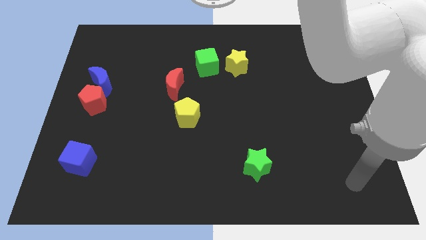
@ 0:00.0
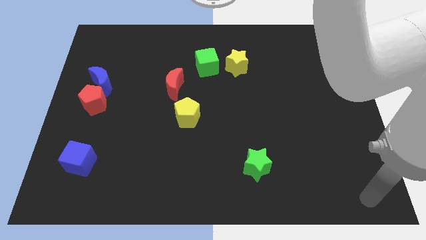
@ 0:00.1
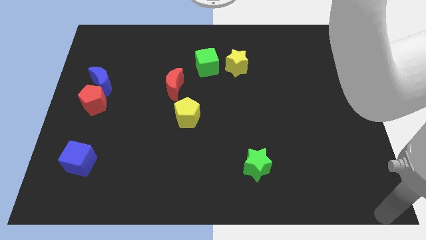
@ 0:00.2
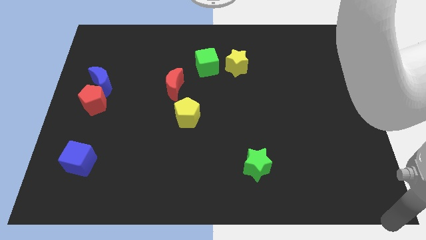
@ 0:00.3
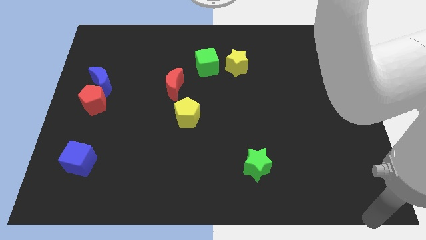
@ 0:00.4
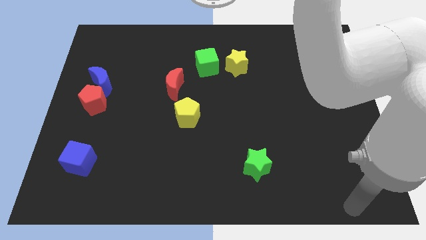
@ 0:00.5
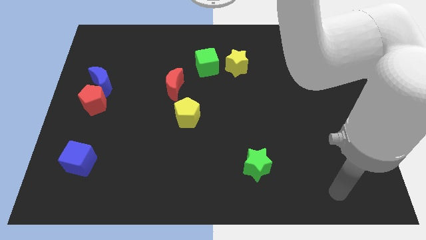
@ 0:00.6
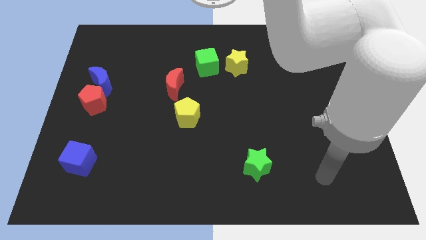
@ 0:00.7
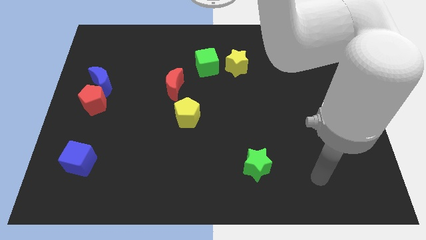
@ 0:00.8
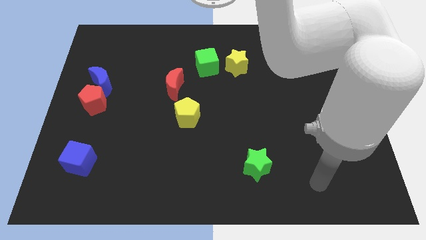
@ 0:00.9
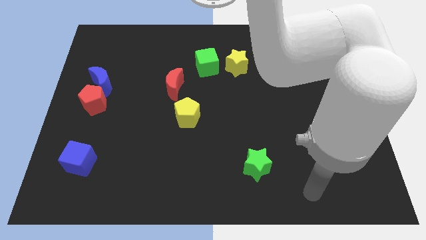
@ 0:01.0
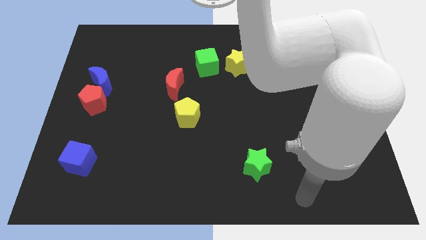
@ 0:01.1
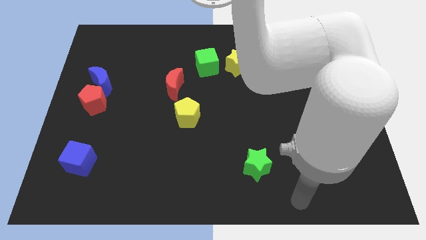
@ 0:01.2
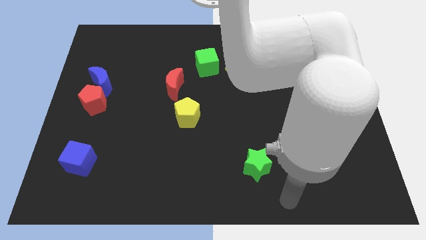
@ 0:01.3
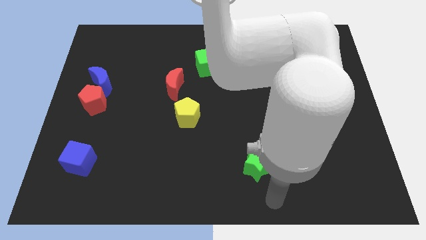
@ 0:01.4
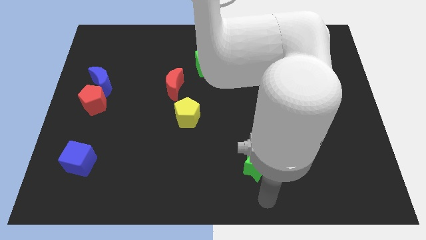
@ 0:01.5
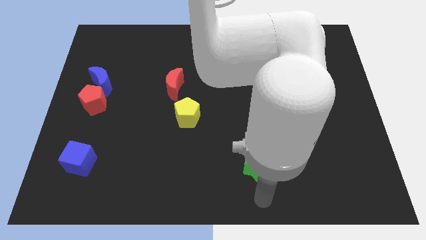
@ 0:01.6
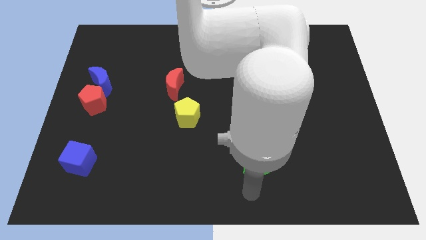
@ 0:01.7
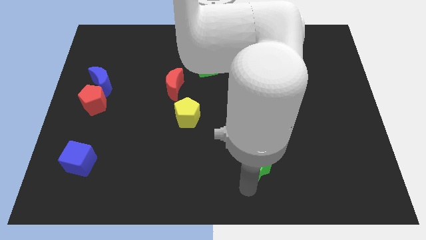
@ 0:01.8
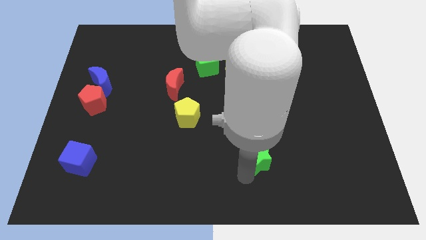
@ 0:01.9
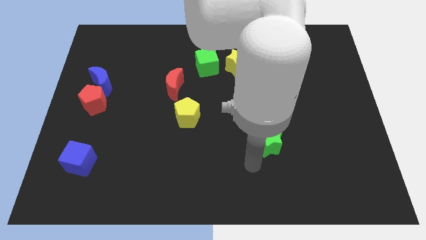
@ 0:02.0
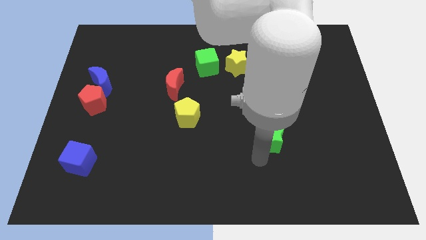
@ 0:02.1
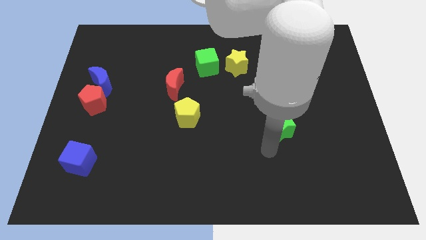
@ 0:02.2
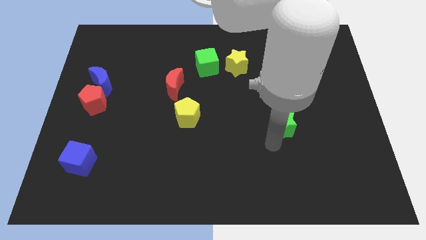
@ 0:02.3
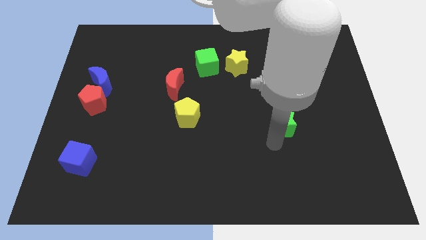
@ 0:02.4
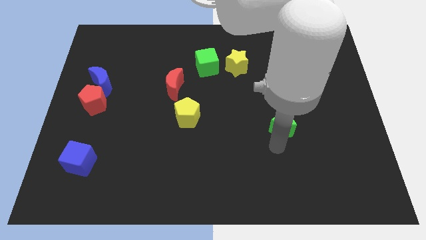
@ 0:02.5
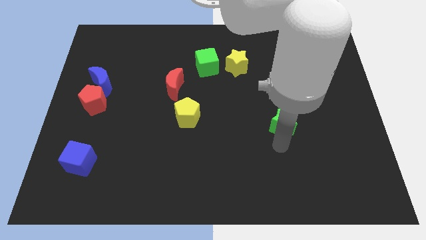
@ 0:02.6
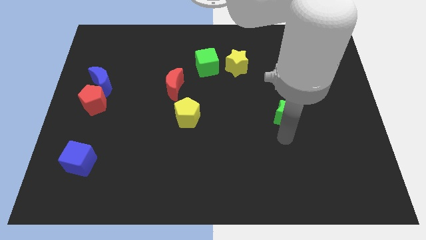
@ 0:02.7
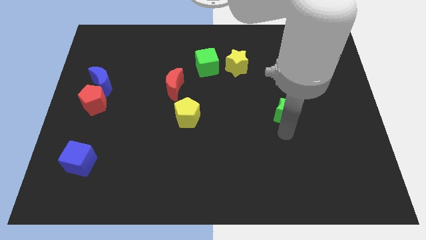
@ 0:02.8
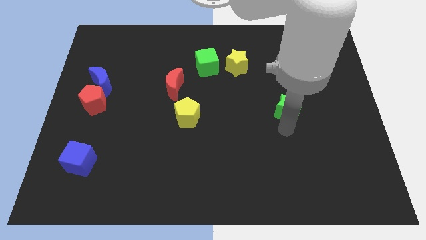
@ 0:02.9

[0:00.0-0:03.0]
move the green star horizontally to the right side of the yellow pentagon

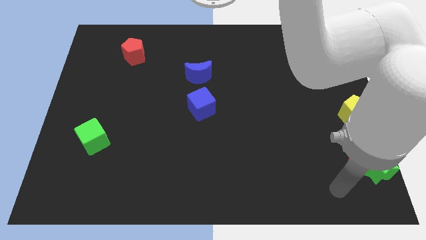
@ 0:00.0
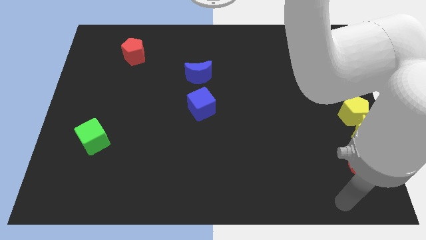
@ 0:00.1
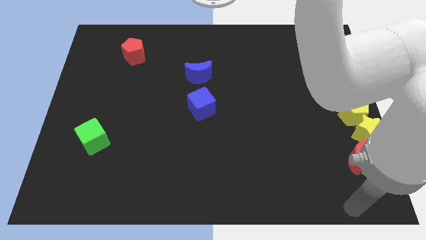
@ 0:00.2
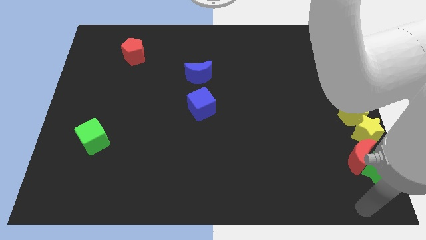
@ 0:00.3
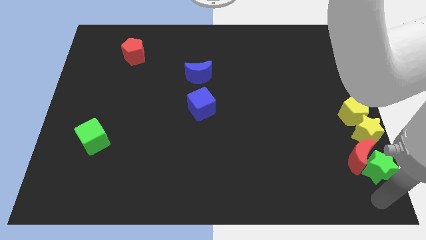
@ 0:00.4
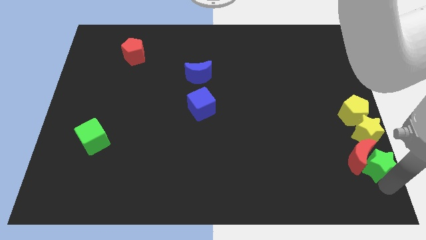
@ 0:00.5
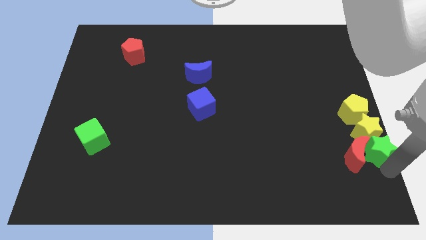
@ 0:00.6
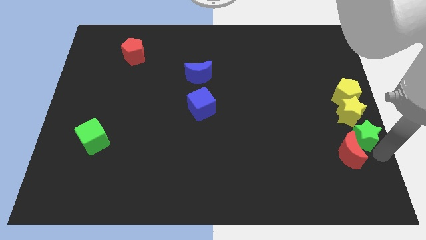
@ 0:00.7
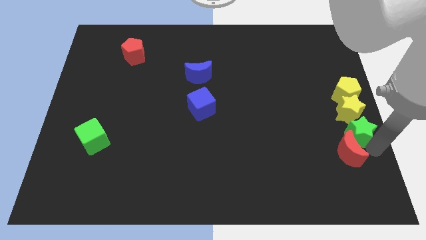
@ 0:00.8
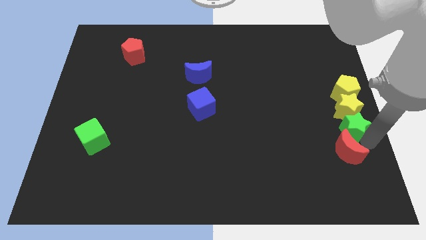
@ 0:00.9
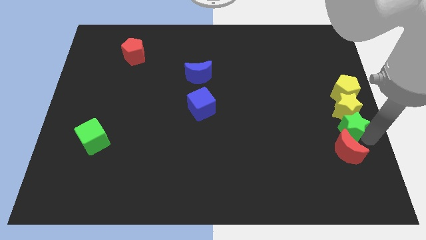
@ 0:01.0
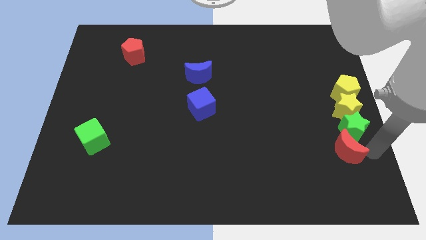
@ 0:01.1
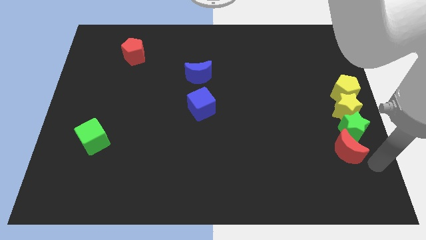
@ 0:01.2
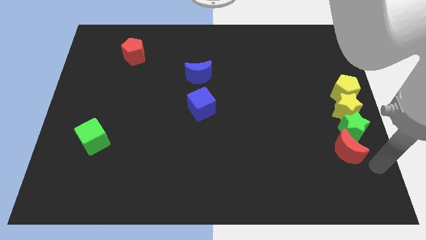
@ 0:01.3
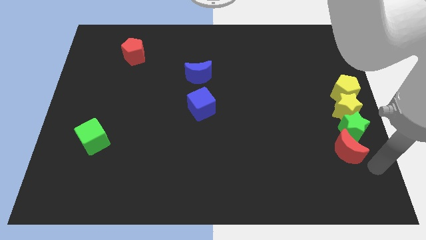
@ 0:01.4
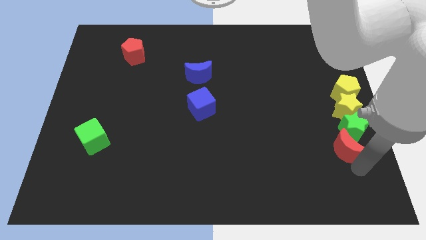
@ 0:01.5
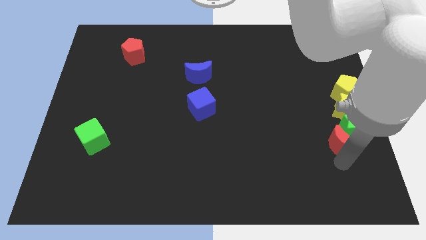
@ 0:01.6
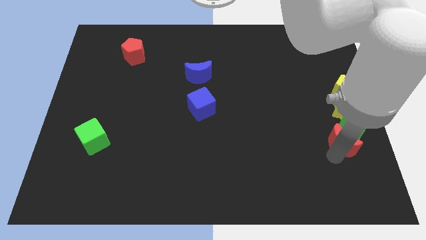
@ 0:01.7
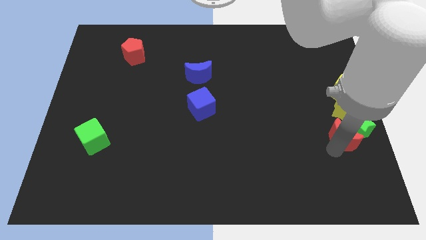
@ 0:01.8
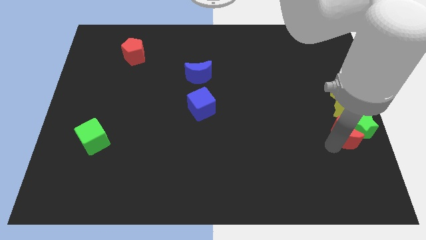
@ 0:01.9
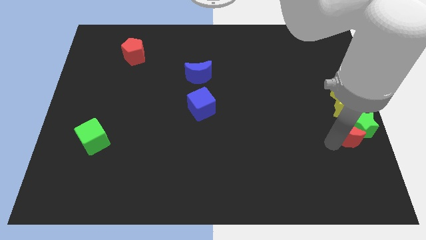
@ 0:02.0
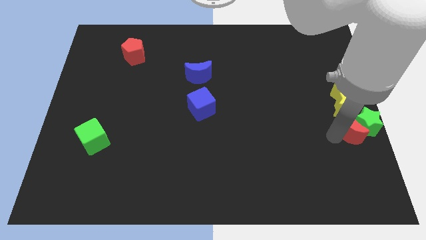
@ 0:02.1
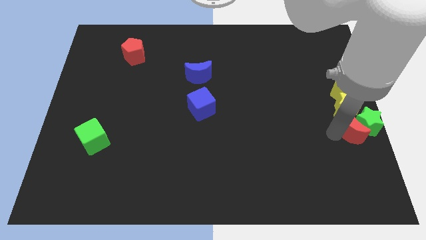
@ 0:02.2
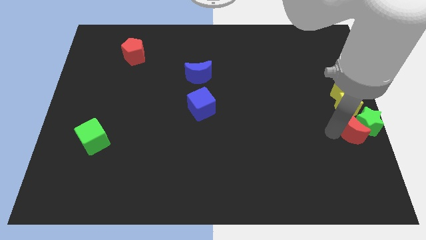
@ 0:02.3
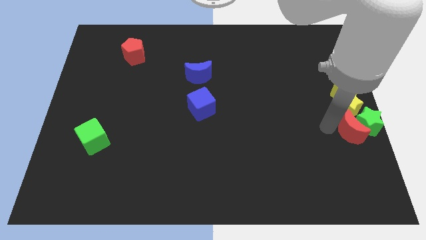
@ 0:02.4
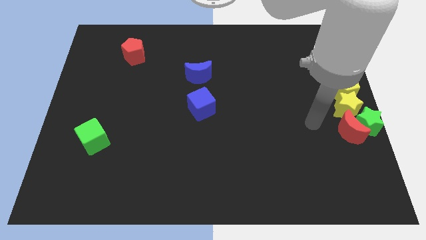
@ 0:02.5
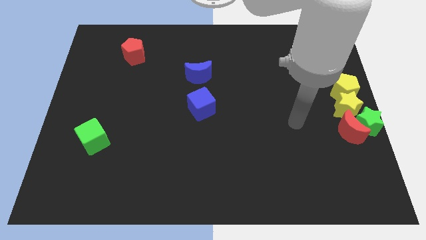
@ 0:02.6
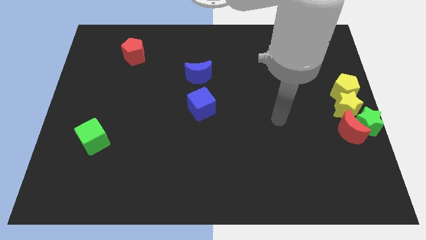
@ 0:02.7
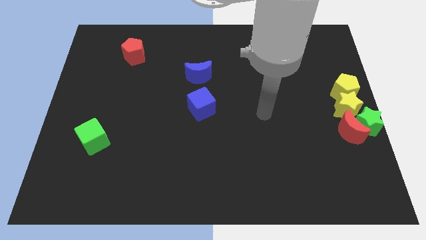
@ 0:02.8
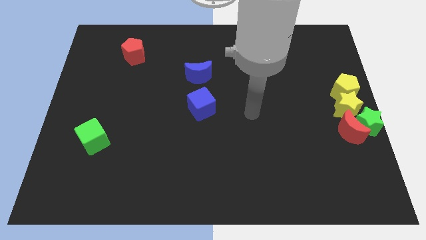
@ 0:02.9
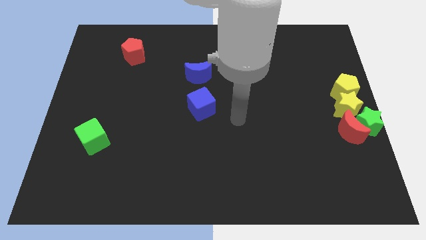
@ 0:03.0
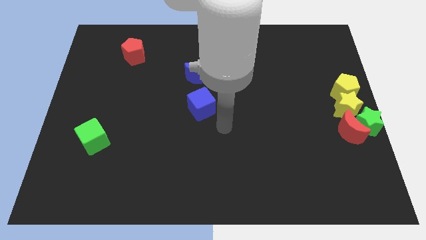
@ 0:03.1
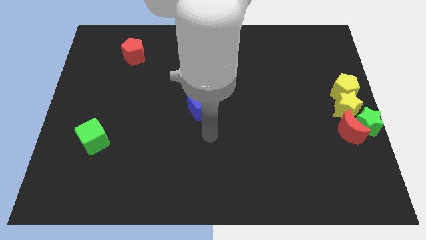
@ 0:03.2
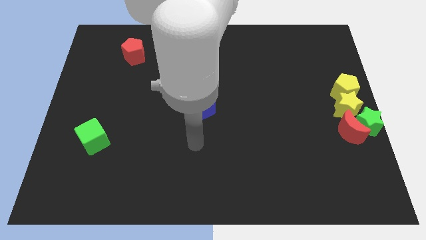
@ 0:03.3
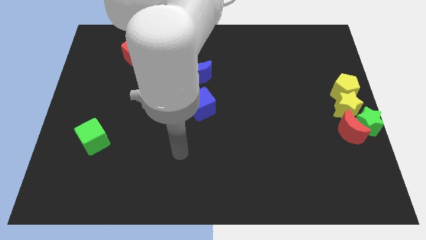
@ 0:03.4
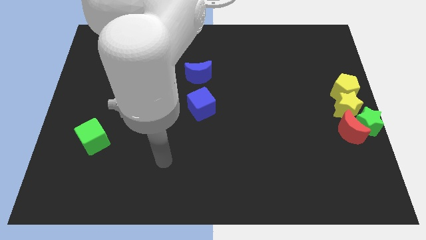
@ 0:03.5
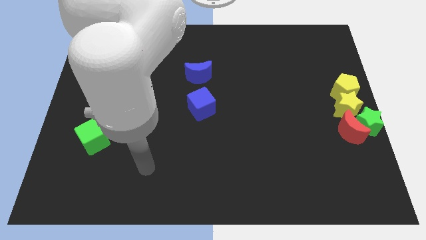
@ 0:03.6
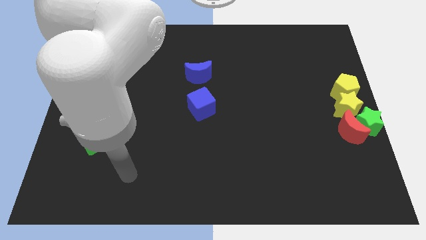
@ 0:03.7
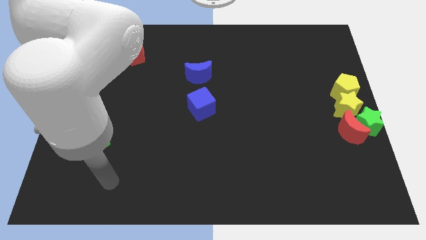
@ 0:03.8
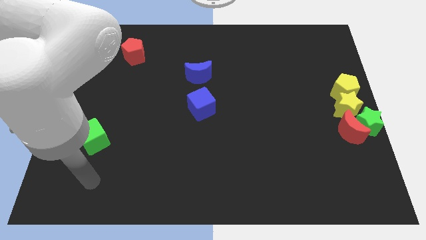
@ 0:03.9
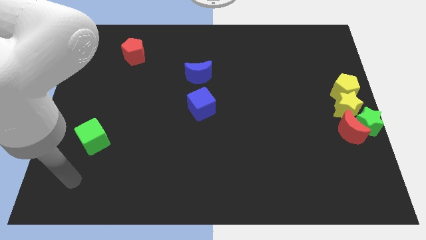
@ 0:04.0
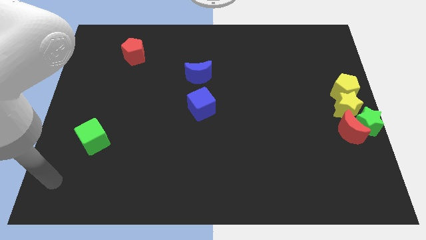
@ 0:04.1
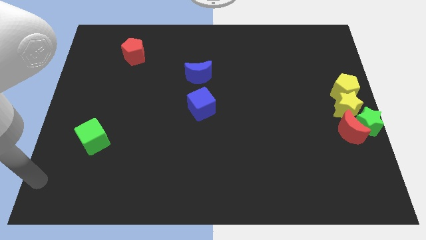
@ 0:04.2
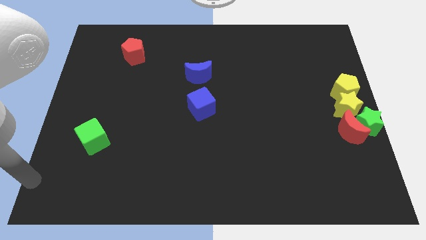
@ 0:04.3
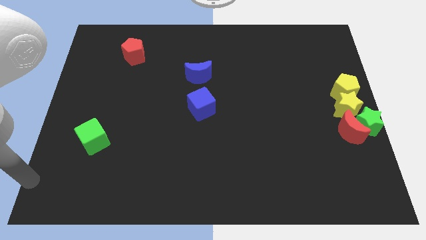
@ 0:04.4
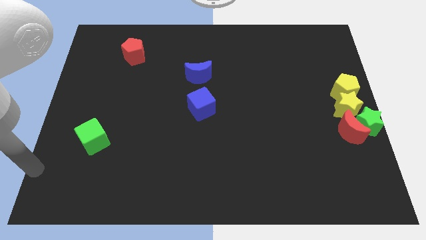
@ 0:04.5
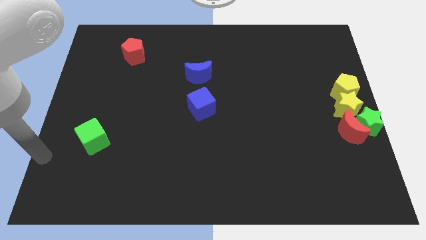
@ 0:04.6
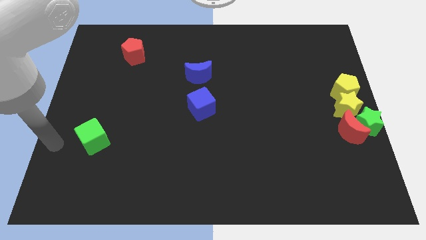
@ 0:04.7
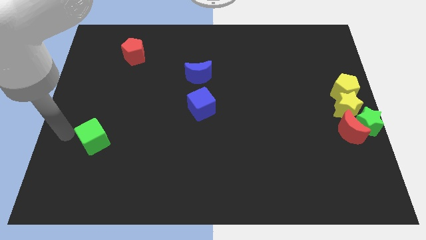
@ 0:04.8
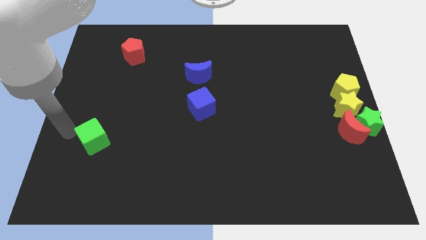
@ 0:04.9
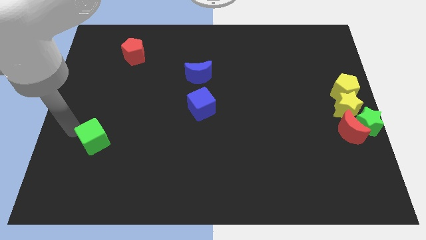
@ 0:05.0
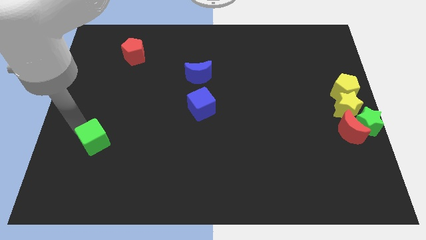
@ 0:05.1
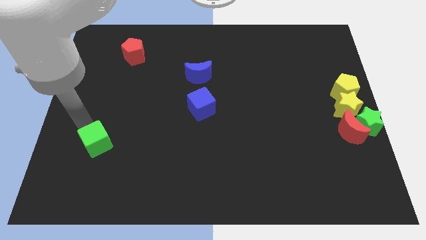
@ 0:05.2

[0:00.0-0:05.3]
move the green star along with yellow blocks slightly towards up

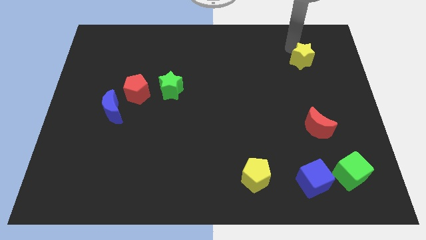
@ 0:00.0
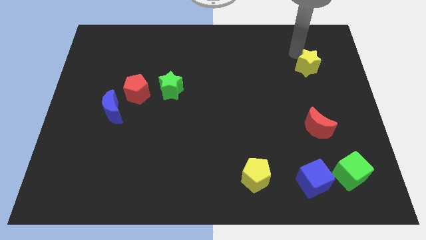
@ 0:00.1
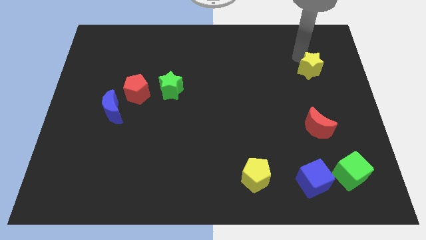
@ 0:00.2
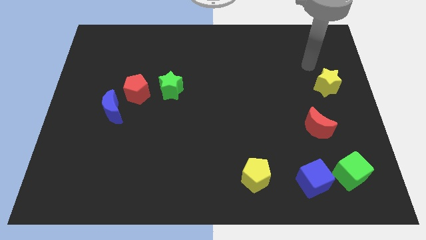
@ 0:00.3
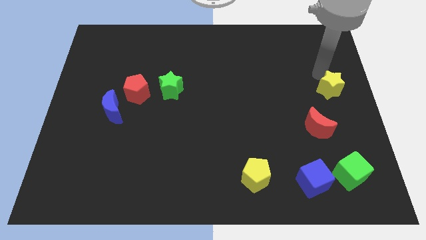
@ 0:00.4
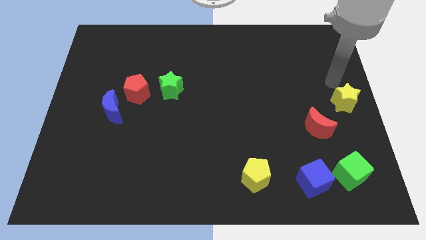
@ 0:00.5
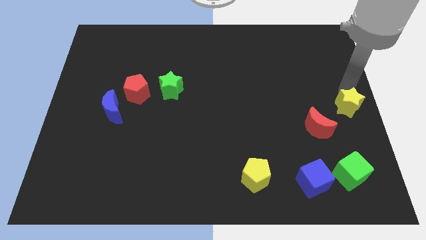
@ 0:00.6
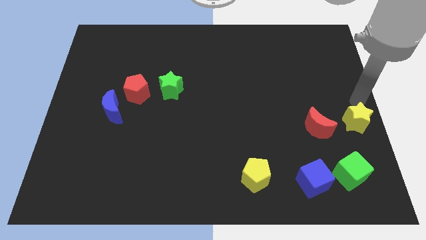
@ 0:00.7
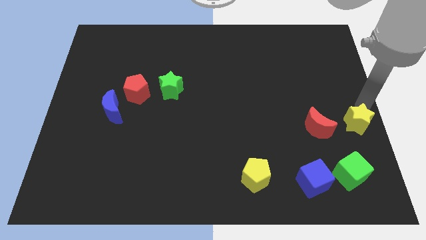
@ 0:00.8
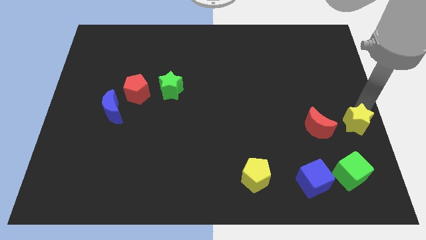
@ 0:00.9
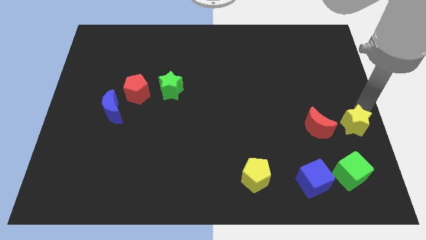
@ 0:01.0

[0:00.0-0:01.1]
push the yellow star to the right of the red crescent
